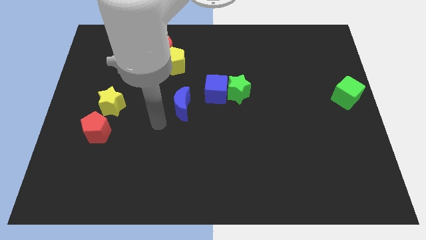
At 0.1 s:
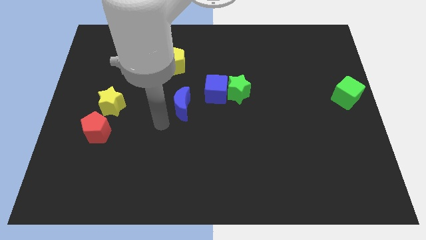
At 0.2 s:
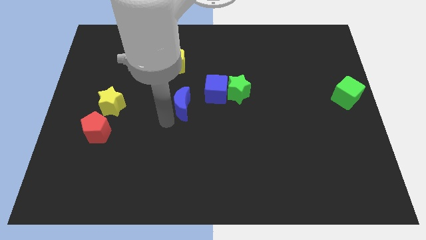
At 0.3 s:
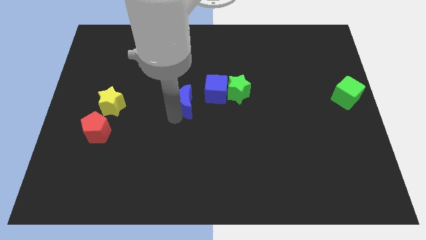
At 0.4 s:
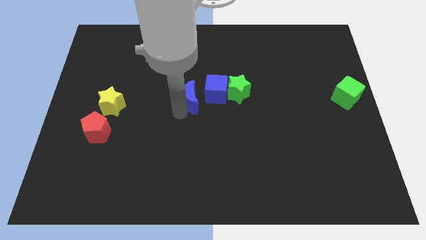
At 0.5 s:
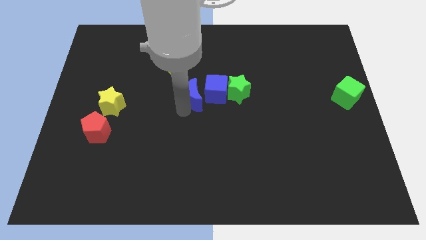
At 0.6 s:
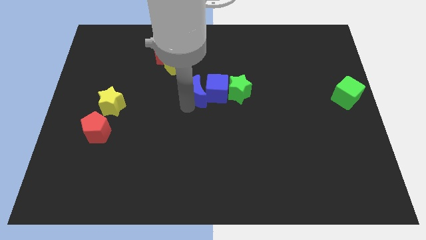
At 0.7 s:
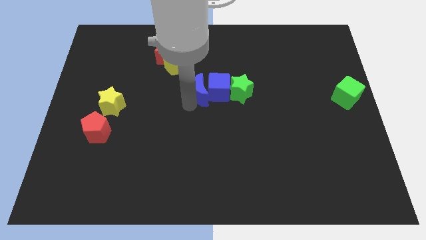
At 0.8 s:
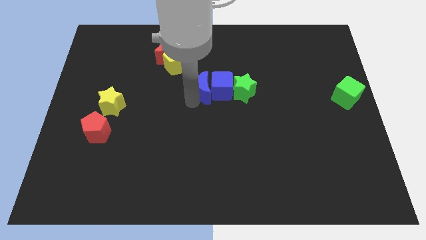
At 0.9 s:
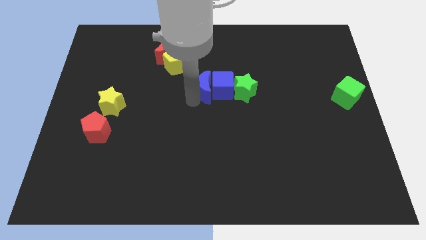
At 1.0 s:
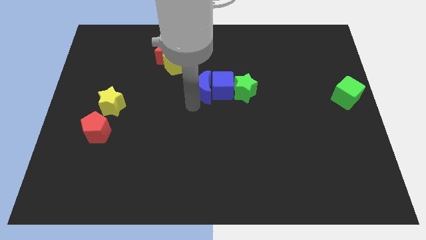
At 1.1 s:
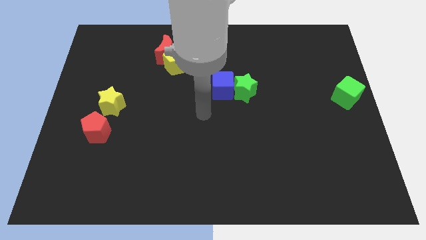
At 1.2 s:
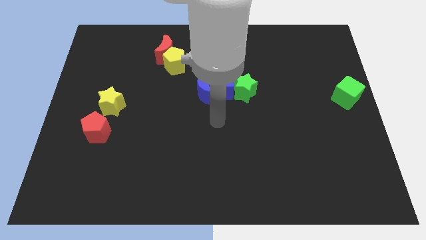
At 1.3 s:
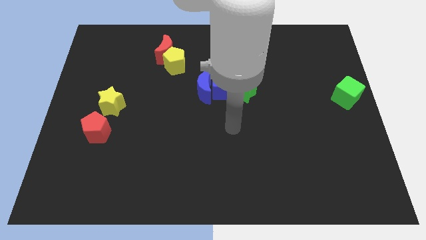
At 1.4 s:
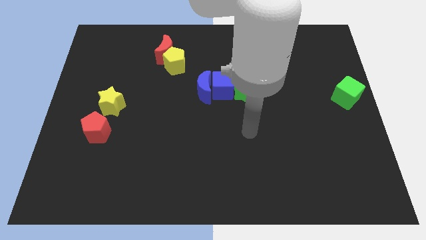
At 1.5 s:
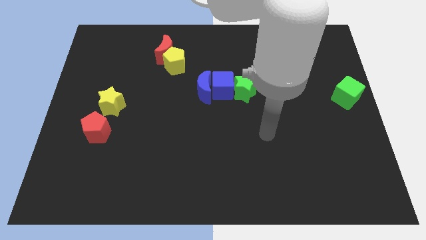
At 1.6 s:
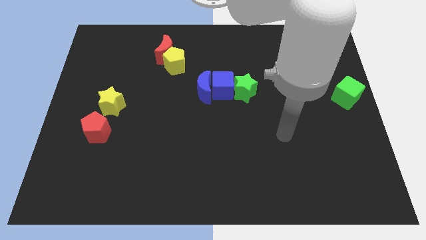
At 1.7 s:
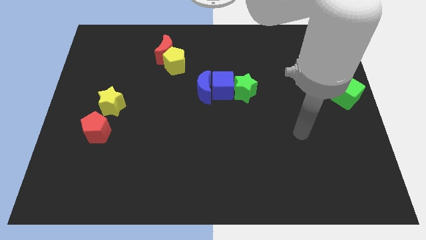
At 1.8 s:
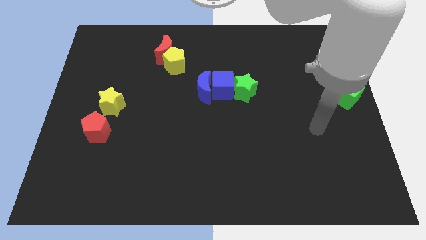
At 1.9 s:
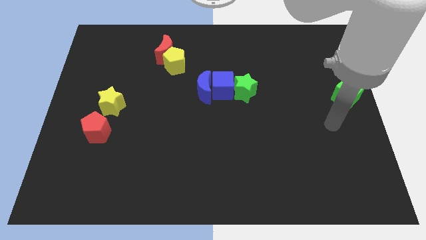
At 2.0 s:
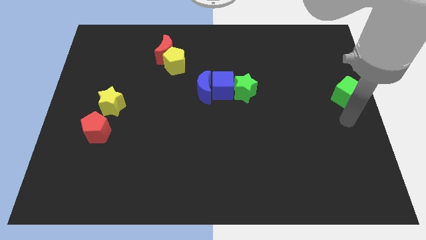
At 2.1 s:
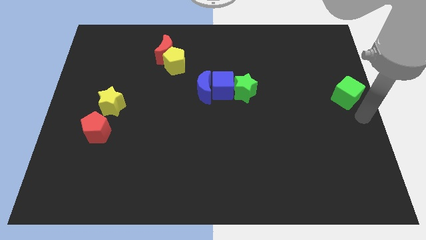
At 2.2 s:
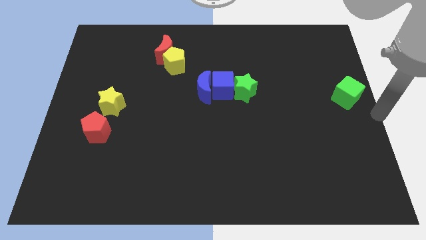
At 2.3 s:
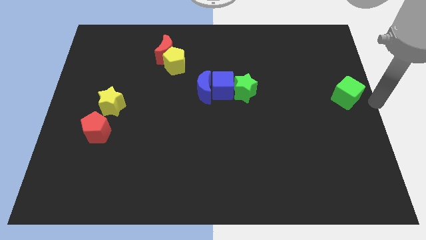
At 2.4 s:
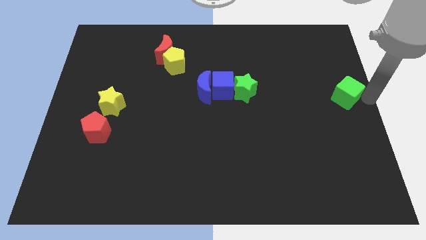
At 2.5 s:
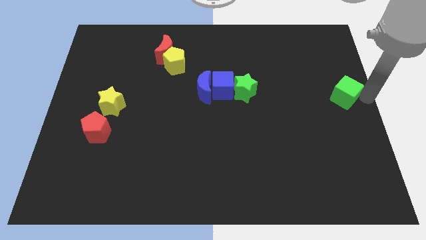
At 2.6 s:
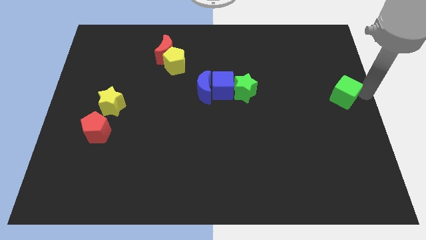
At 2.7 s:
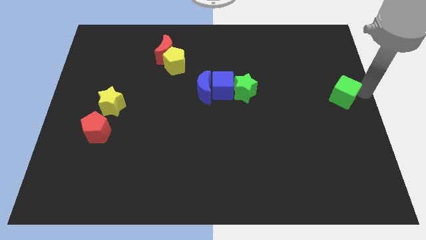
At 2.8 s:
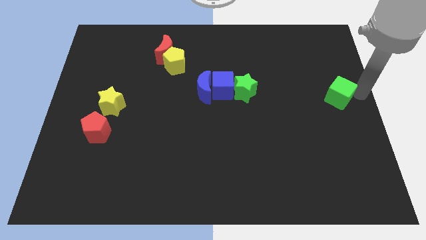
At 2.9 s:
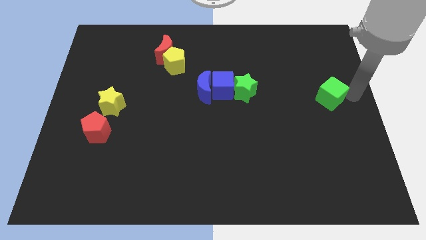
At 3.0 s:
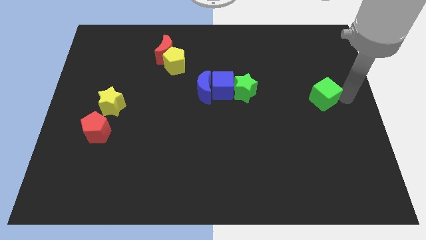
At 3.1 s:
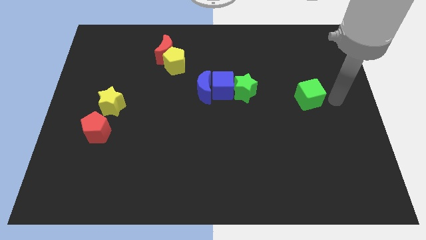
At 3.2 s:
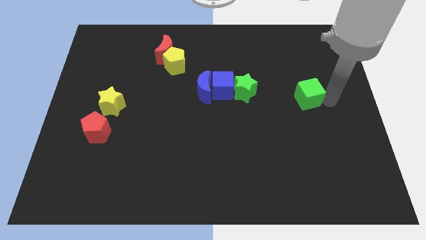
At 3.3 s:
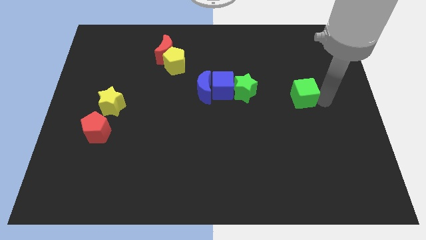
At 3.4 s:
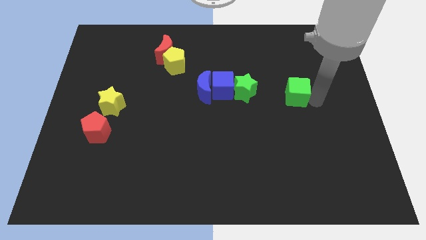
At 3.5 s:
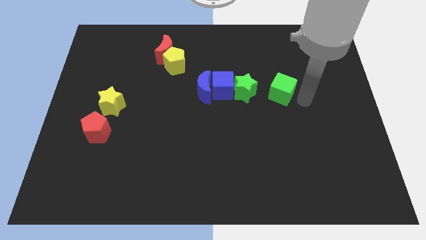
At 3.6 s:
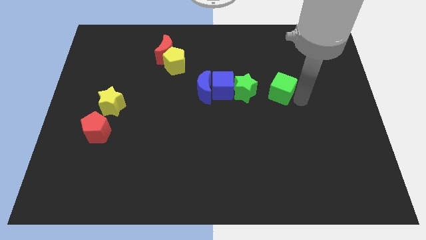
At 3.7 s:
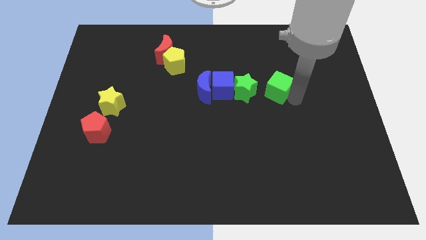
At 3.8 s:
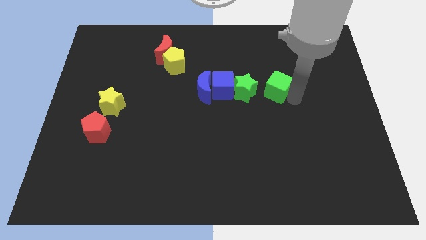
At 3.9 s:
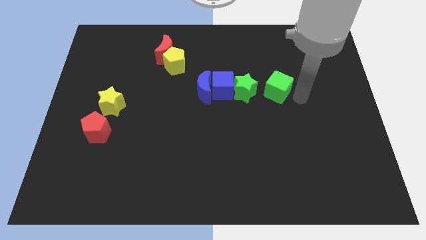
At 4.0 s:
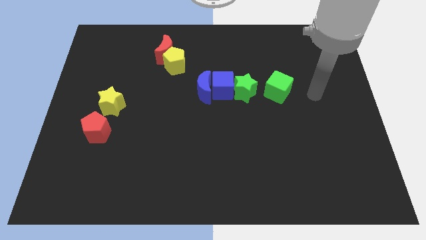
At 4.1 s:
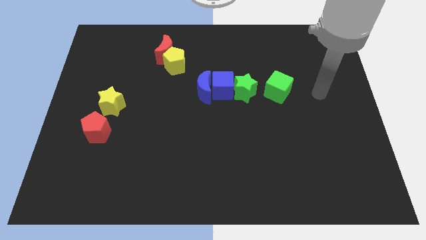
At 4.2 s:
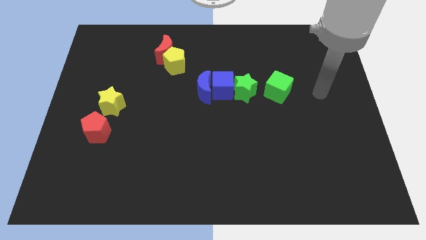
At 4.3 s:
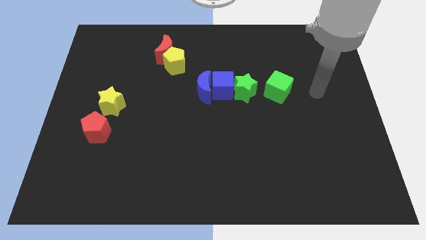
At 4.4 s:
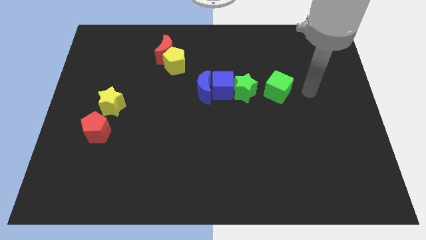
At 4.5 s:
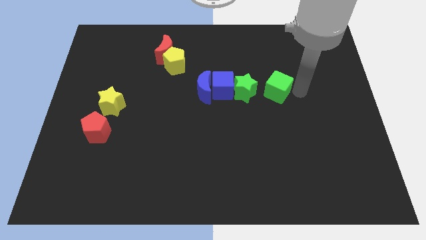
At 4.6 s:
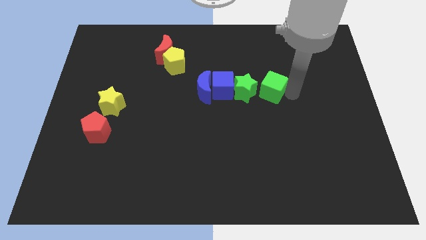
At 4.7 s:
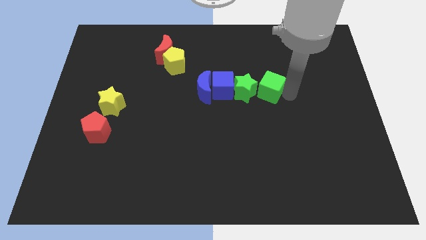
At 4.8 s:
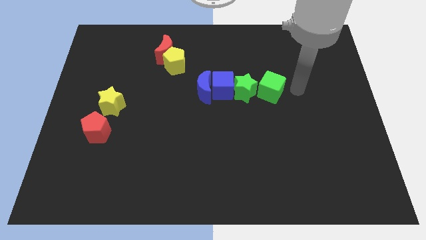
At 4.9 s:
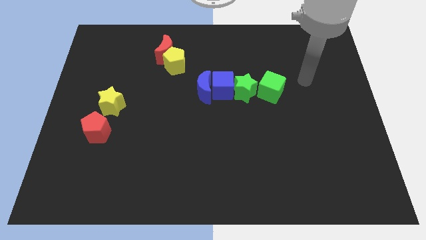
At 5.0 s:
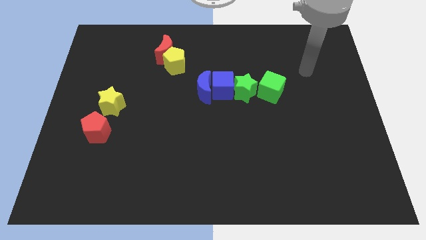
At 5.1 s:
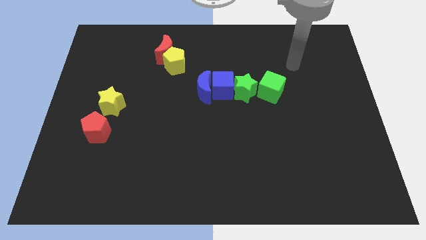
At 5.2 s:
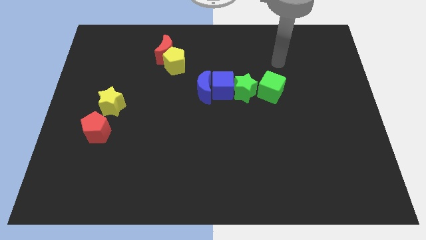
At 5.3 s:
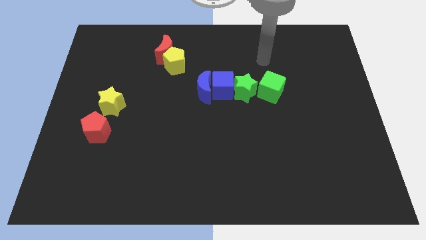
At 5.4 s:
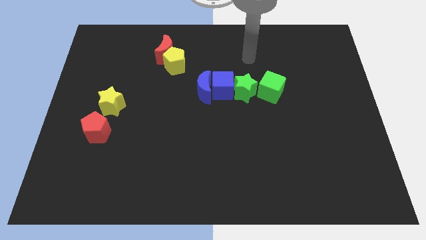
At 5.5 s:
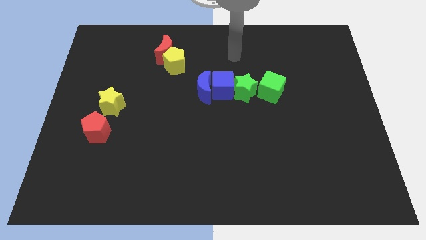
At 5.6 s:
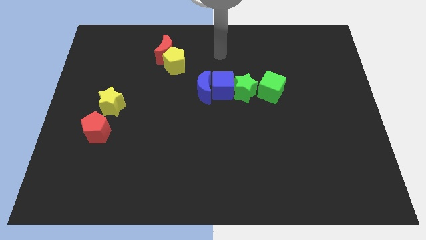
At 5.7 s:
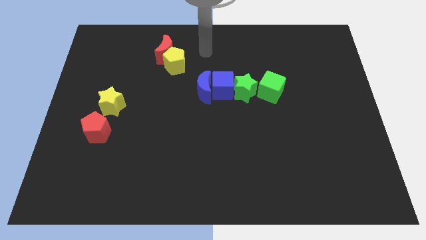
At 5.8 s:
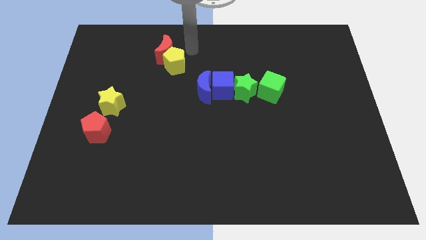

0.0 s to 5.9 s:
join the blue and green blocks at the center of the board

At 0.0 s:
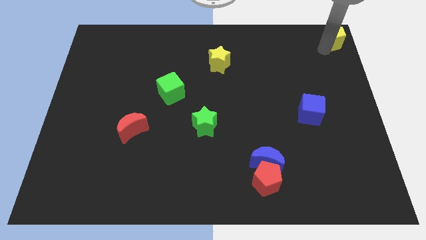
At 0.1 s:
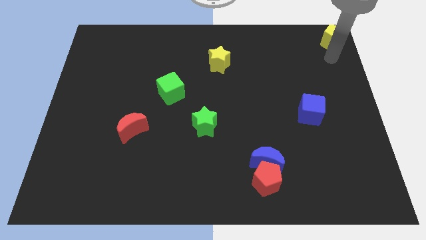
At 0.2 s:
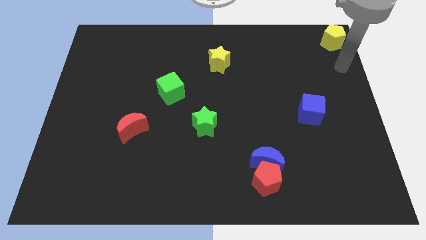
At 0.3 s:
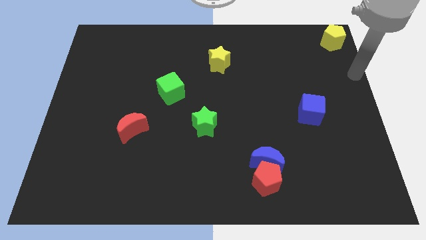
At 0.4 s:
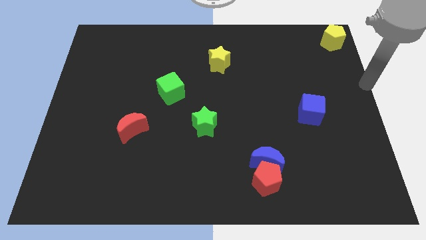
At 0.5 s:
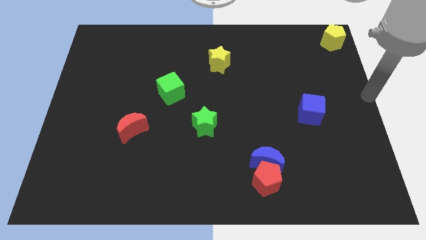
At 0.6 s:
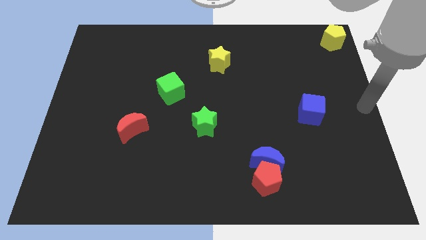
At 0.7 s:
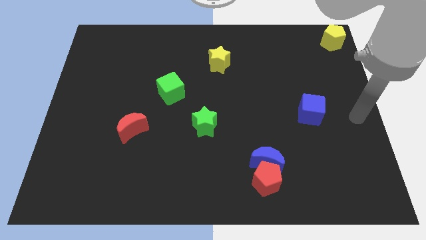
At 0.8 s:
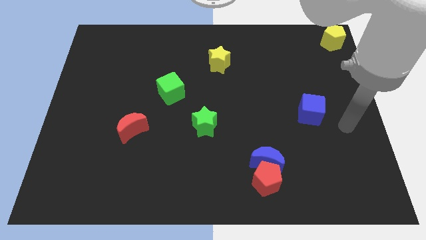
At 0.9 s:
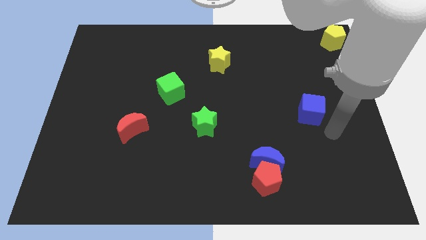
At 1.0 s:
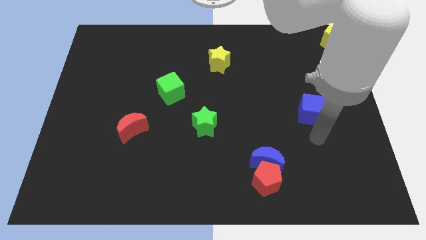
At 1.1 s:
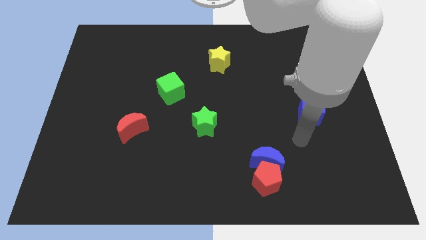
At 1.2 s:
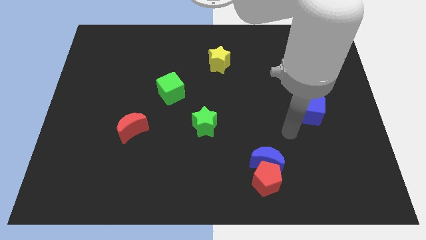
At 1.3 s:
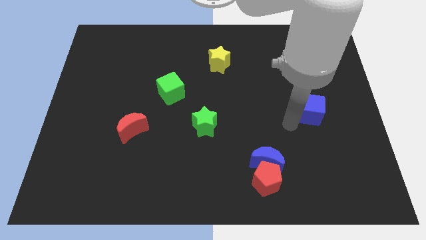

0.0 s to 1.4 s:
move arm towards the blue cube on the right center of the board

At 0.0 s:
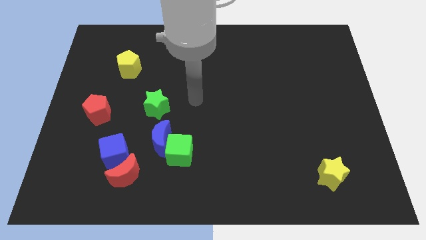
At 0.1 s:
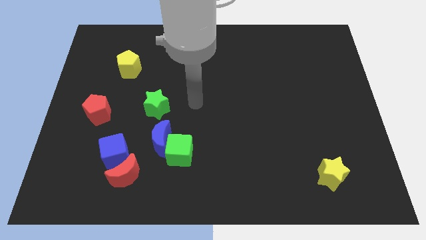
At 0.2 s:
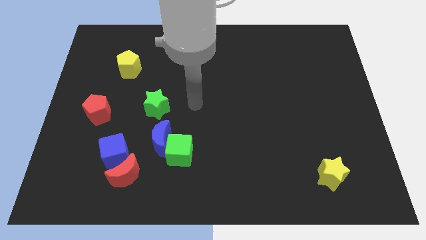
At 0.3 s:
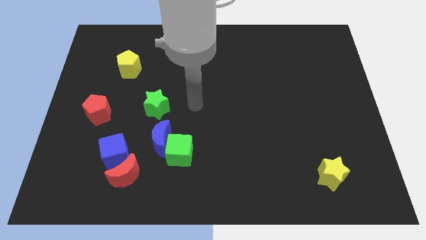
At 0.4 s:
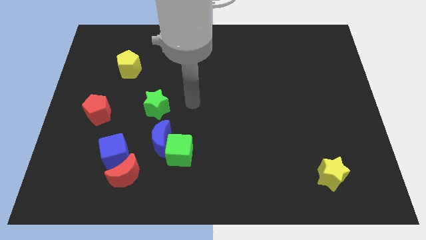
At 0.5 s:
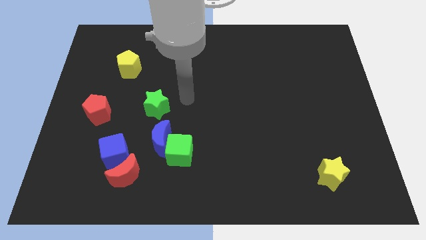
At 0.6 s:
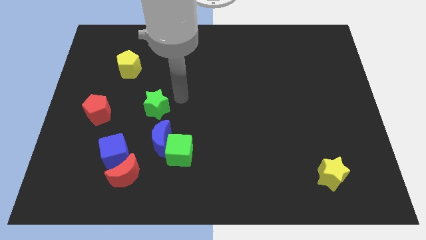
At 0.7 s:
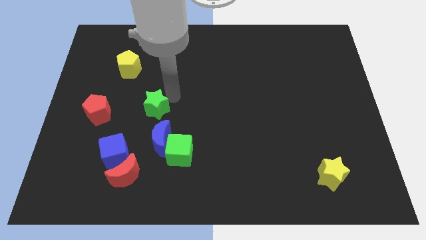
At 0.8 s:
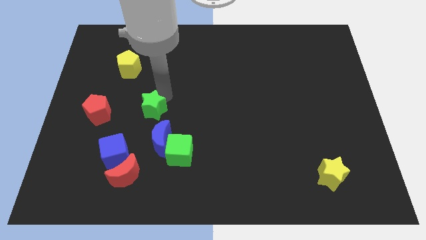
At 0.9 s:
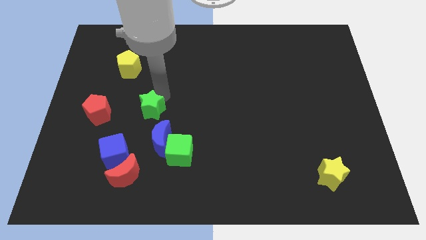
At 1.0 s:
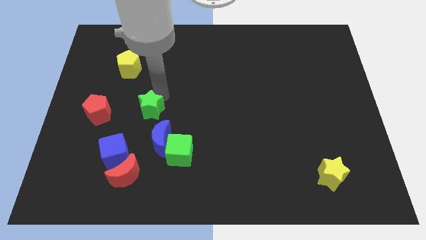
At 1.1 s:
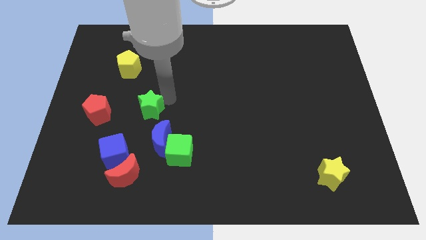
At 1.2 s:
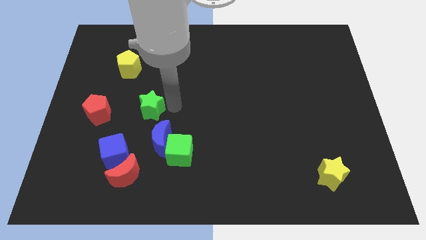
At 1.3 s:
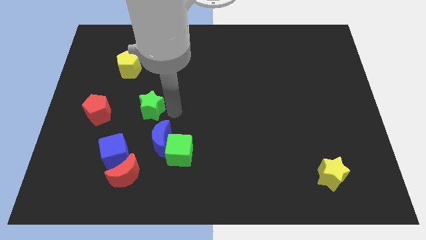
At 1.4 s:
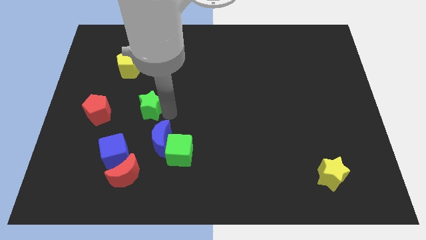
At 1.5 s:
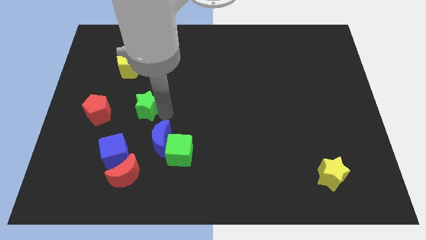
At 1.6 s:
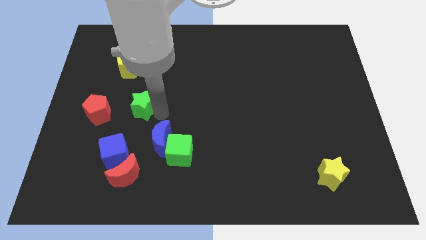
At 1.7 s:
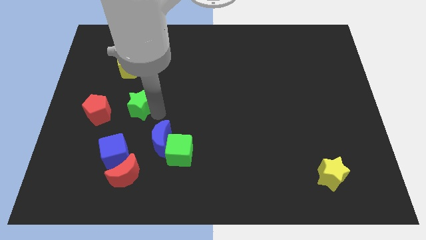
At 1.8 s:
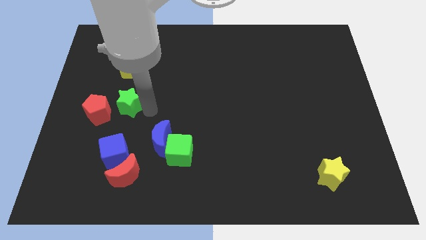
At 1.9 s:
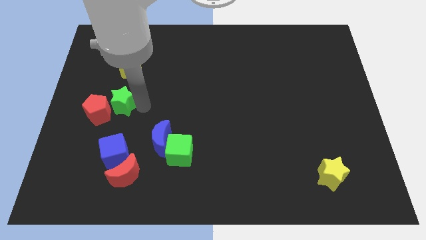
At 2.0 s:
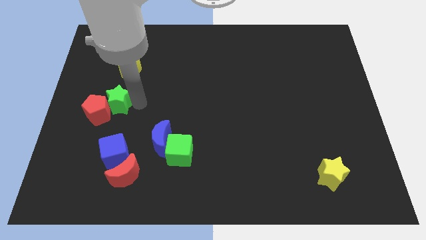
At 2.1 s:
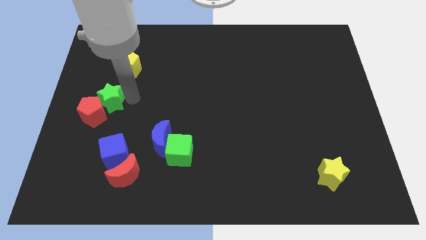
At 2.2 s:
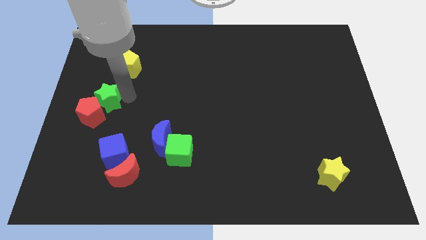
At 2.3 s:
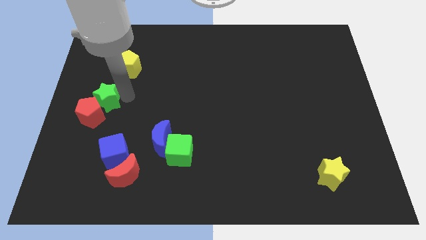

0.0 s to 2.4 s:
push the green star into the red pentagon
